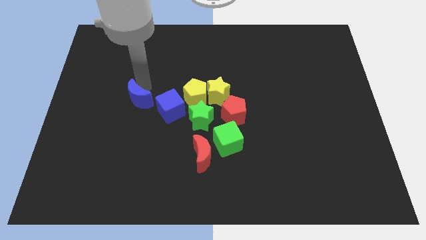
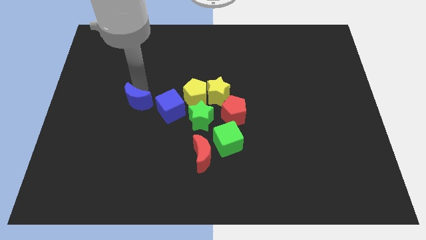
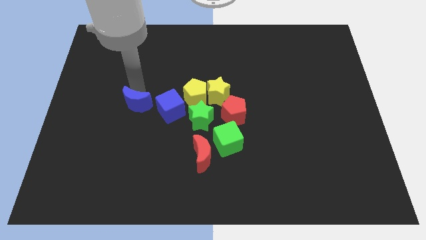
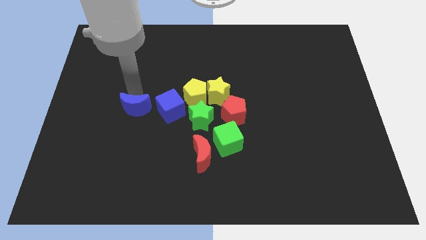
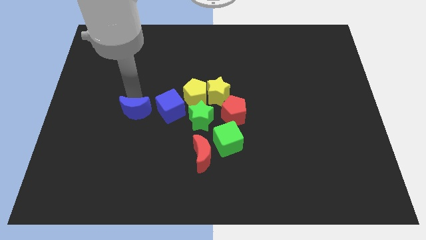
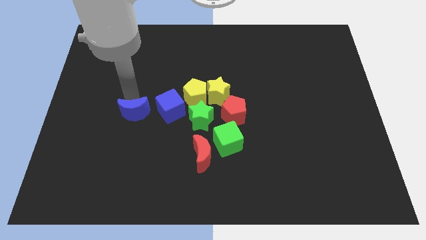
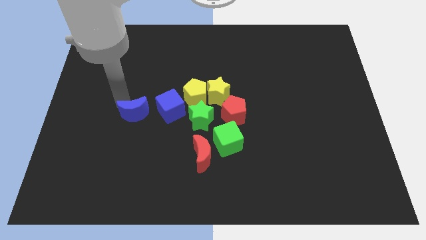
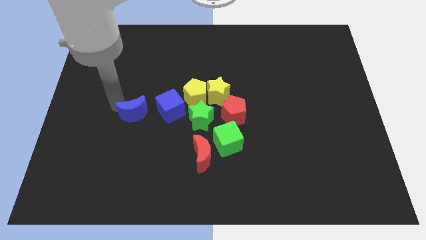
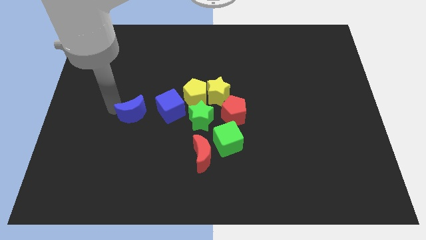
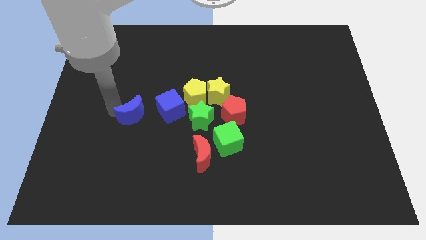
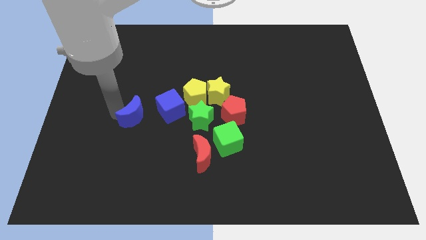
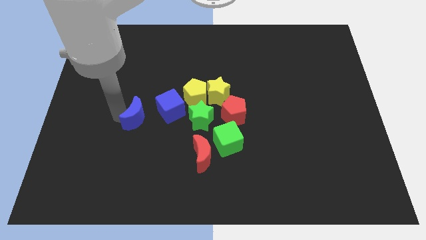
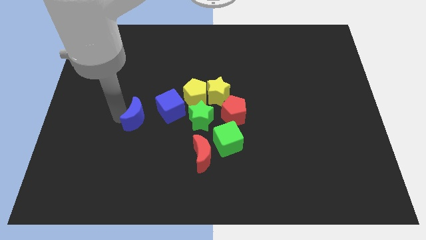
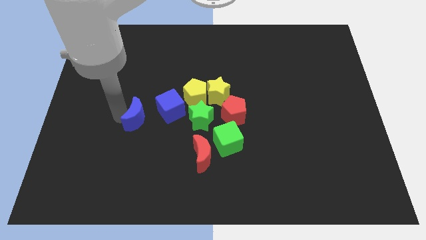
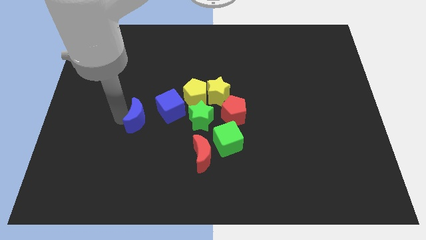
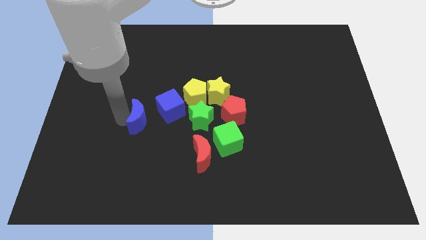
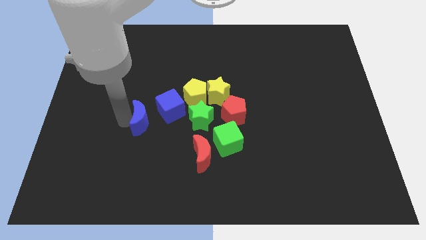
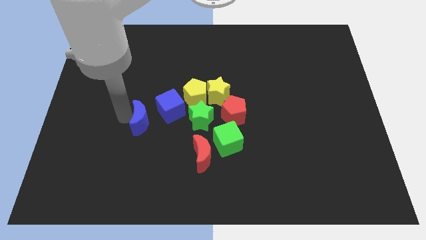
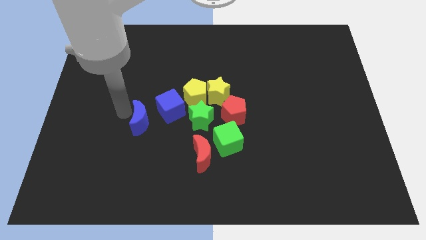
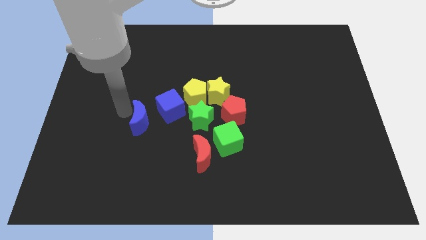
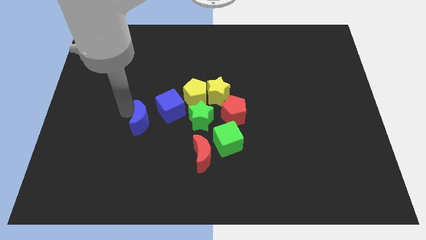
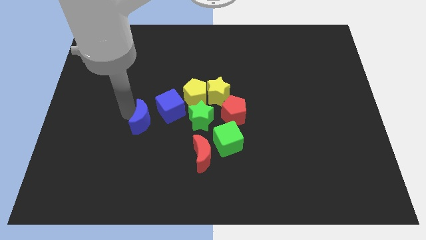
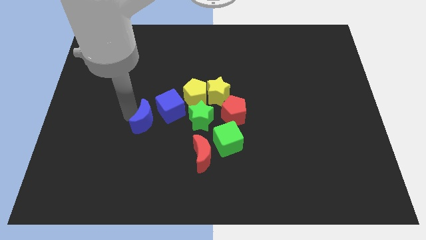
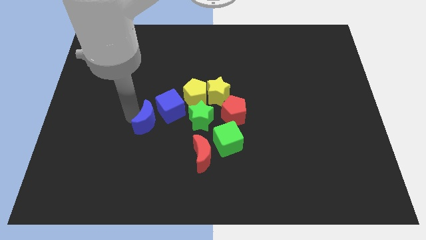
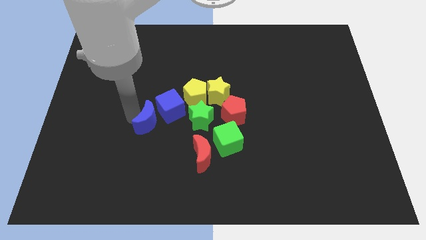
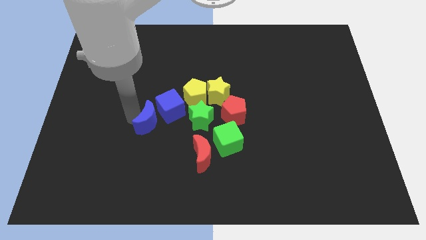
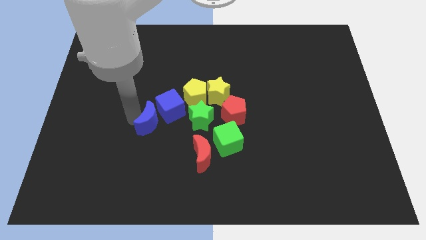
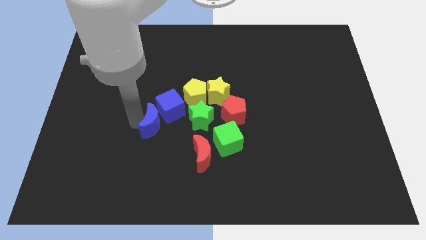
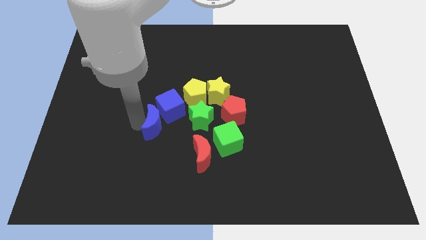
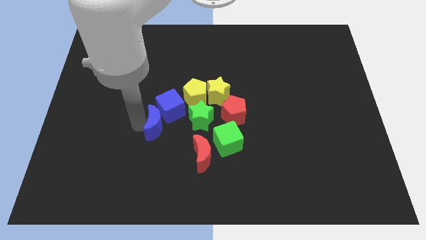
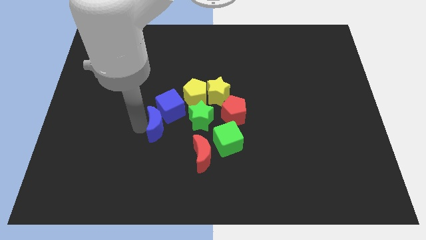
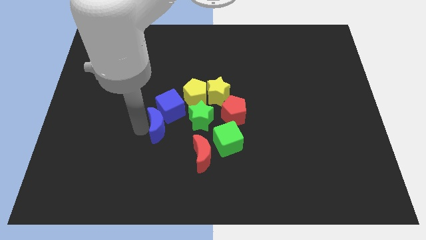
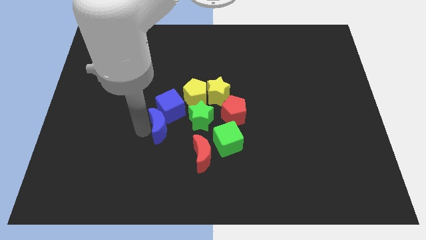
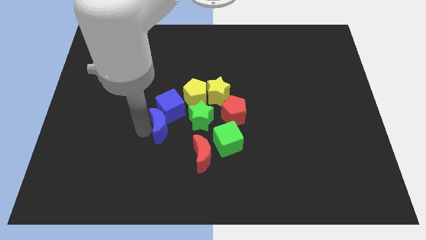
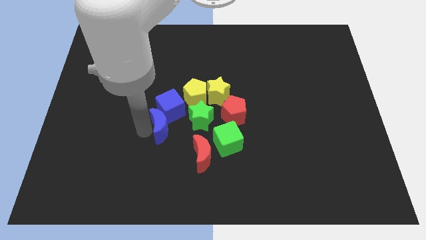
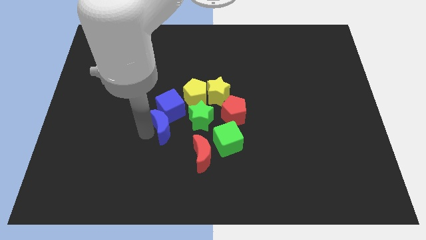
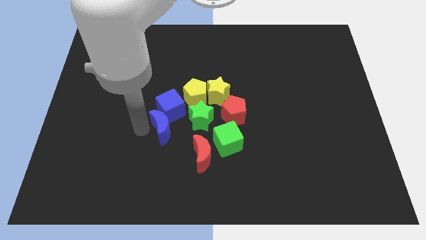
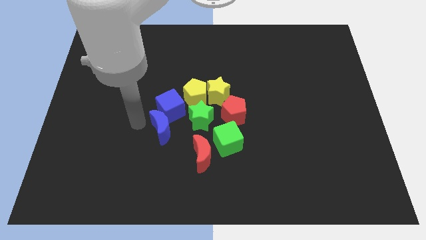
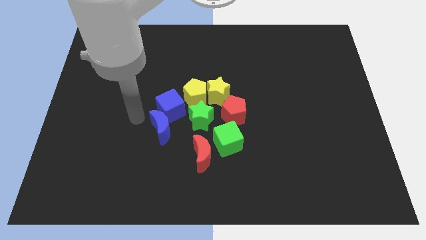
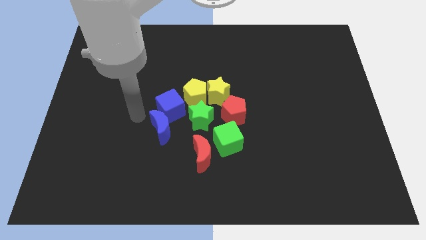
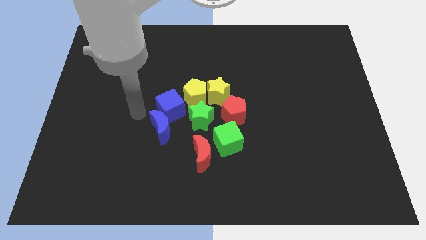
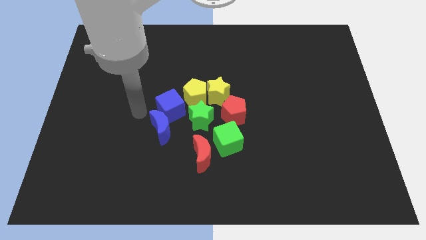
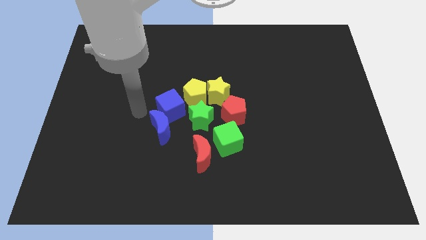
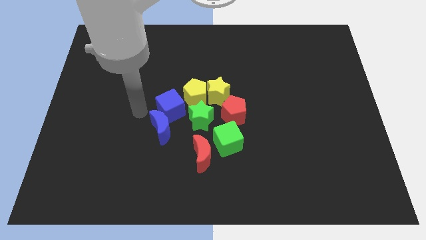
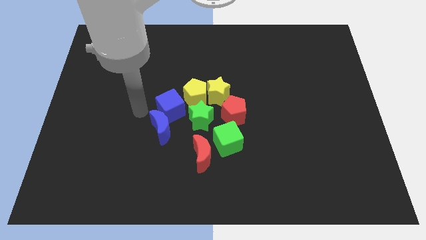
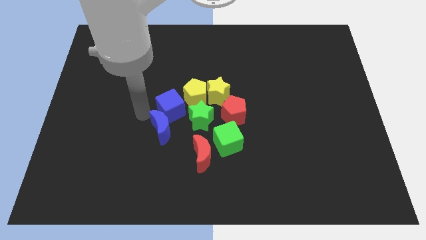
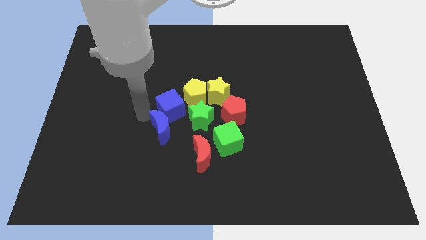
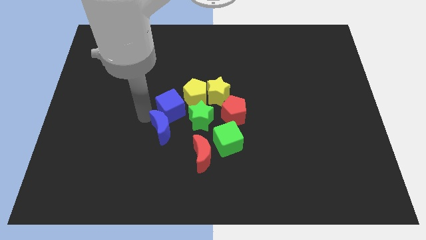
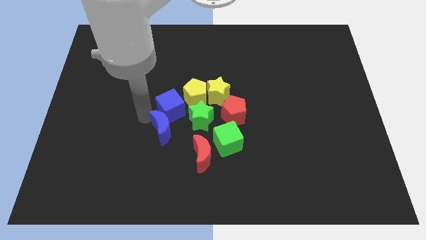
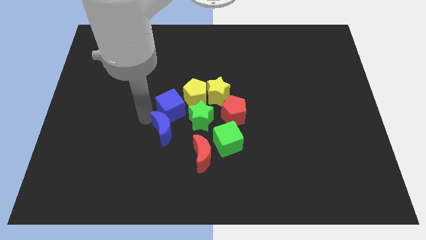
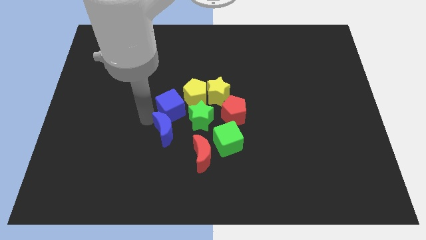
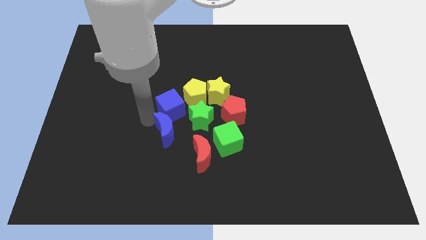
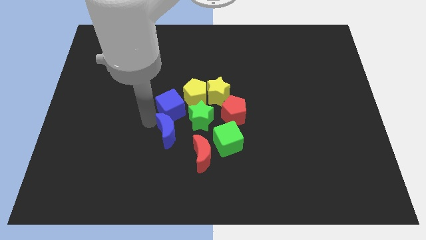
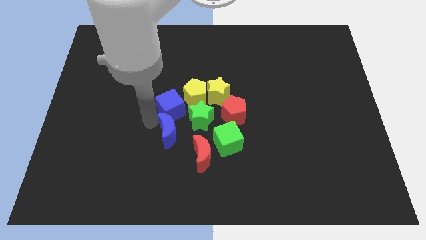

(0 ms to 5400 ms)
place the blue moon at the bottom of the blue cube

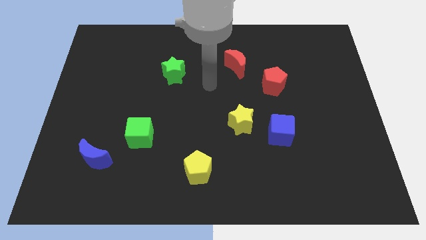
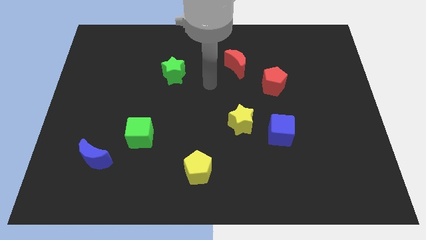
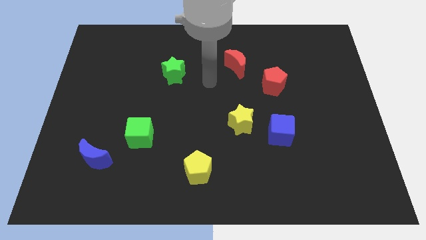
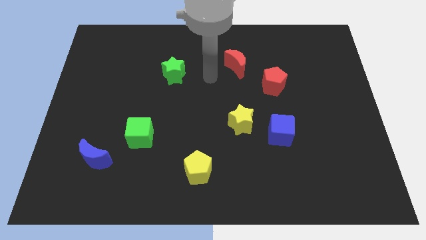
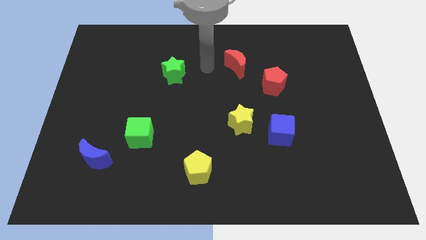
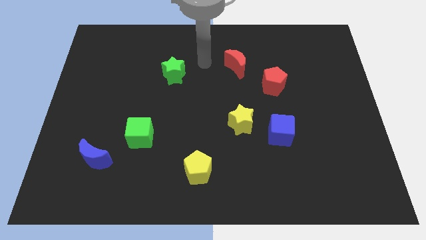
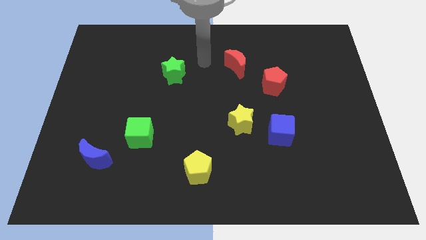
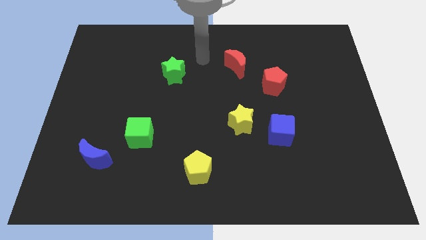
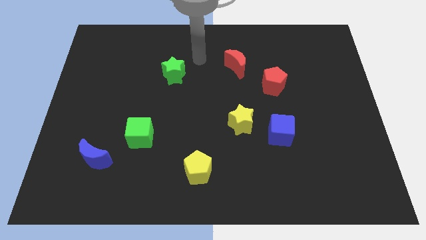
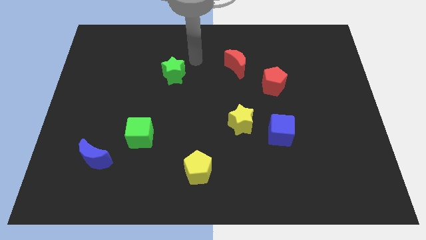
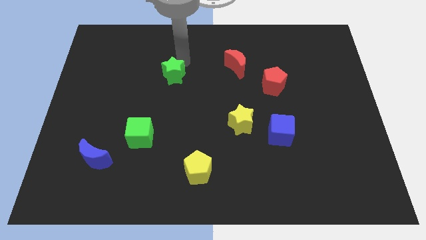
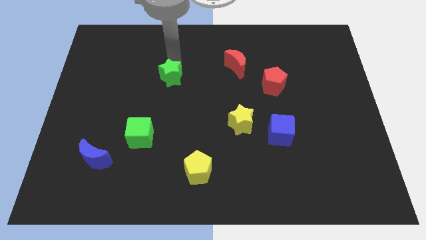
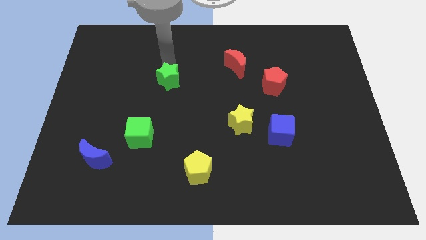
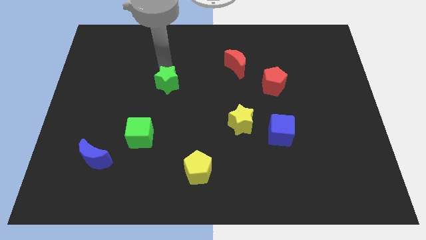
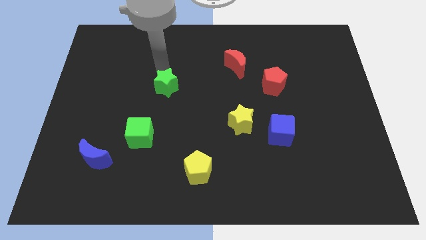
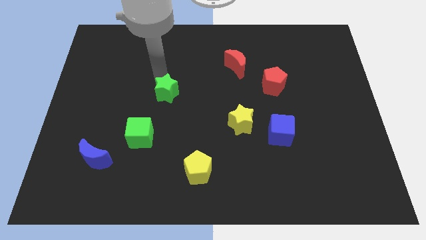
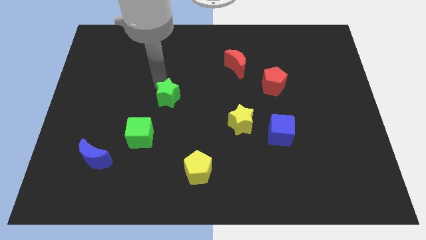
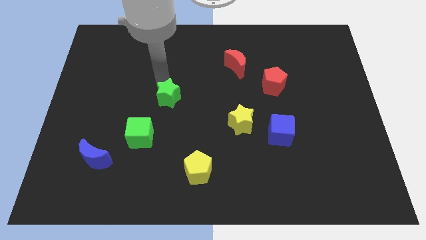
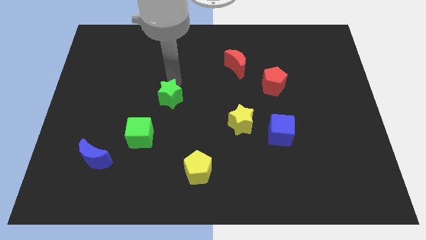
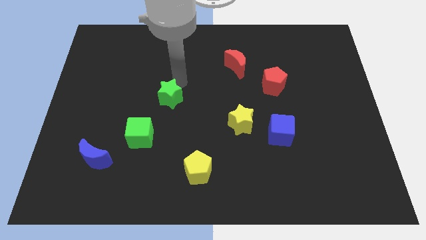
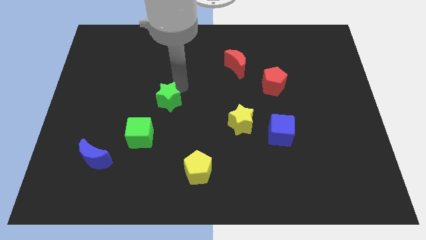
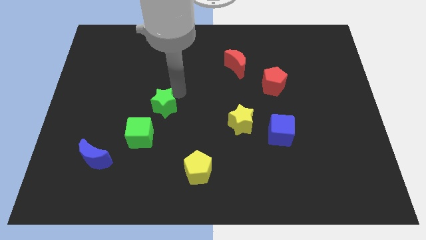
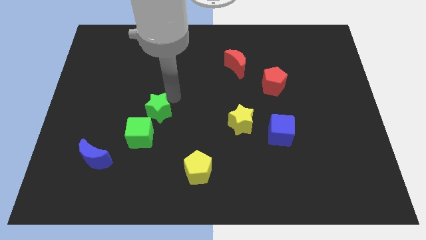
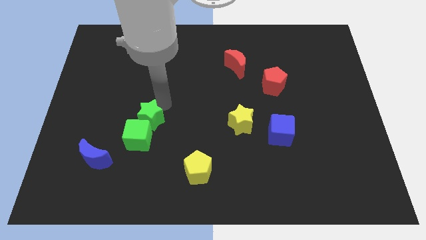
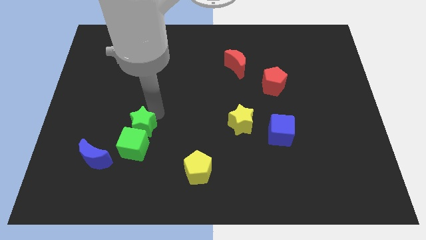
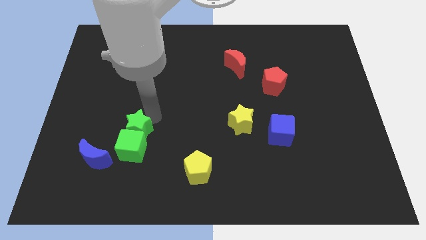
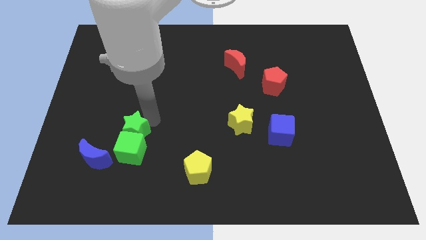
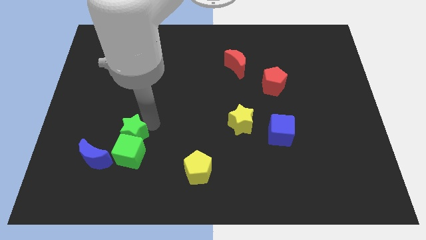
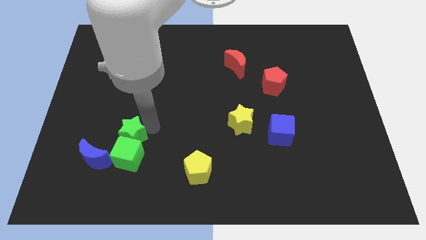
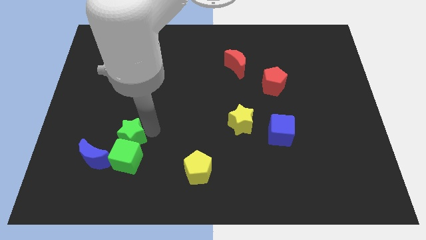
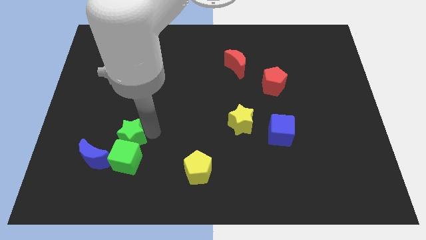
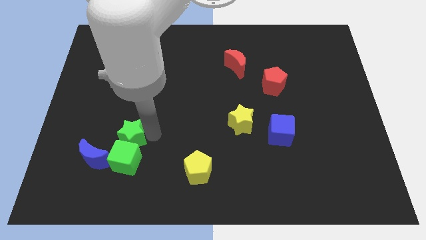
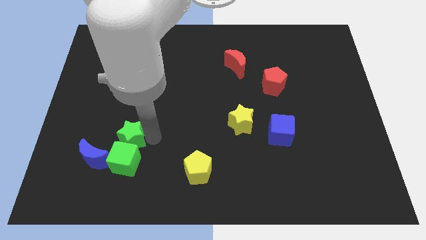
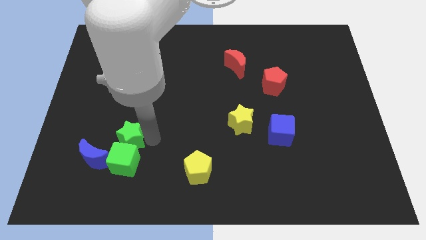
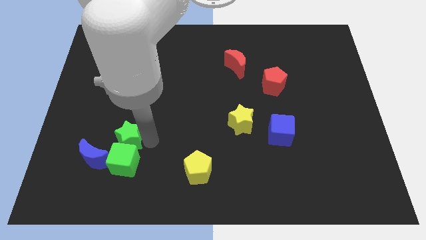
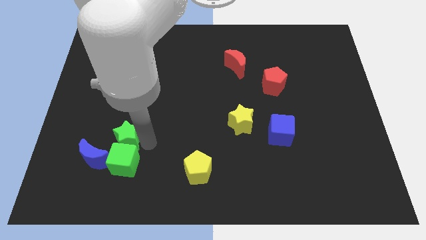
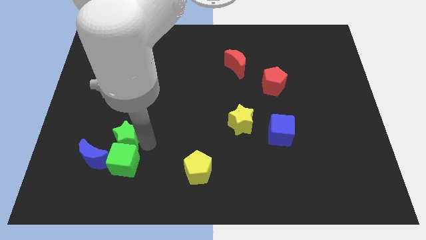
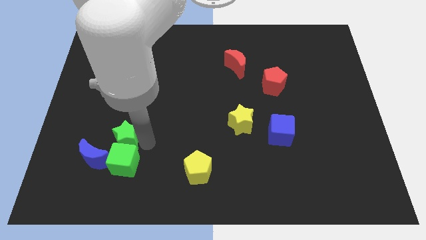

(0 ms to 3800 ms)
place the green blocks to the right side of the blue moon
